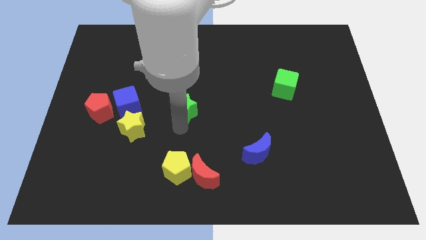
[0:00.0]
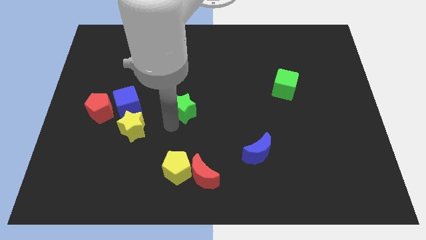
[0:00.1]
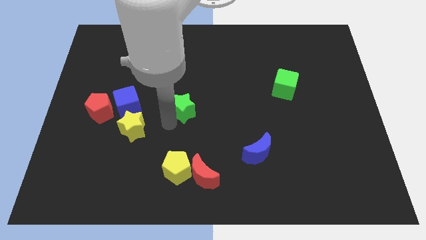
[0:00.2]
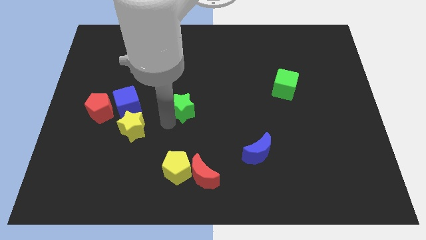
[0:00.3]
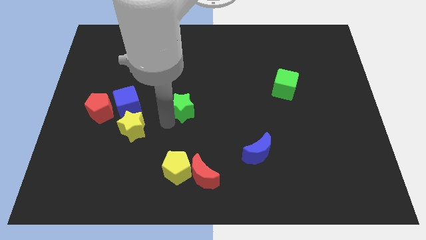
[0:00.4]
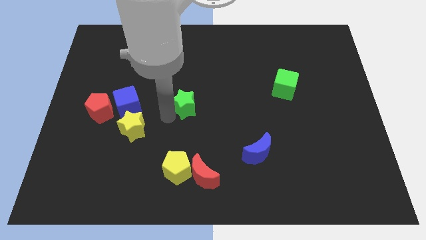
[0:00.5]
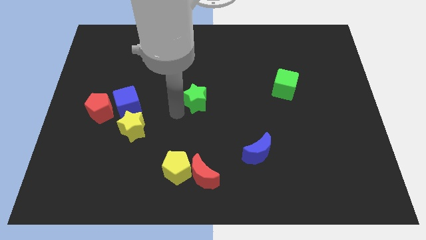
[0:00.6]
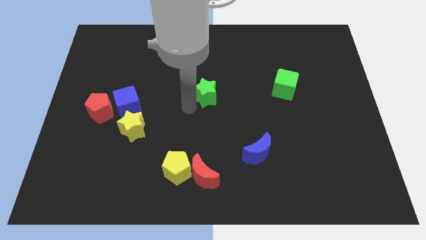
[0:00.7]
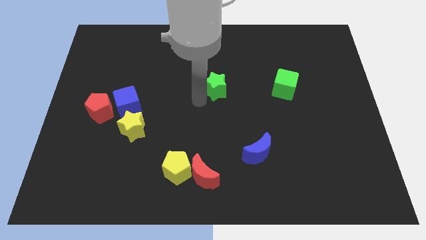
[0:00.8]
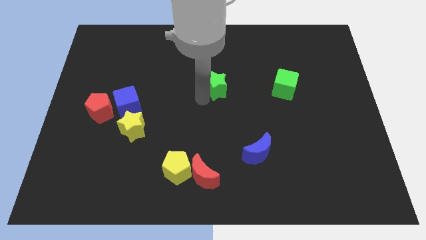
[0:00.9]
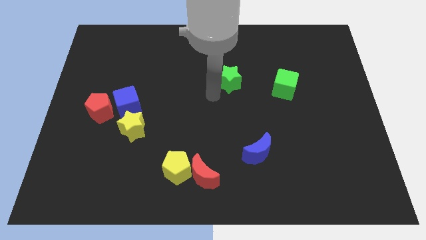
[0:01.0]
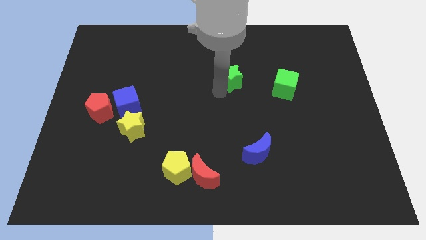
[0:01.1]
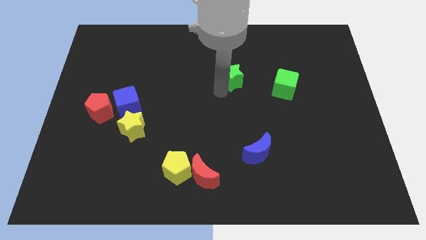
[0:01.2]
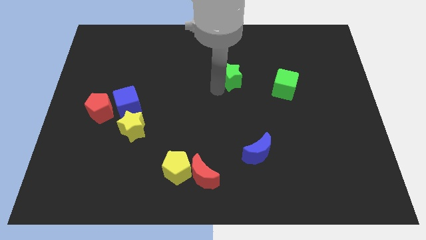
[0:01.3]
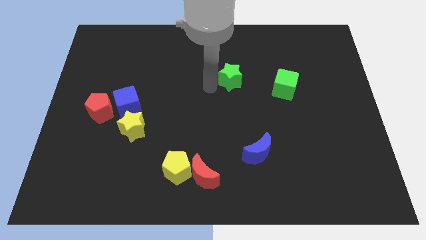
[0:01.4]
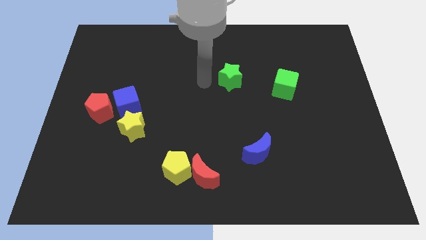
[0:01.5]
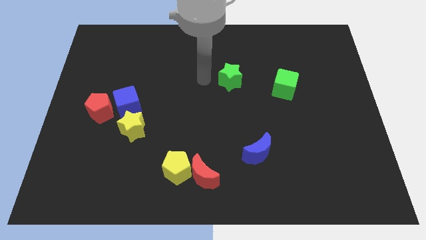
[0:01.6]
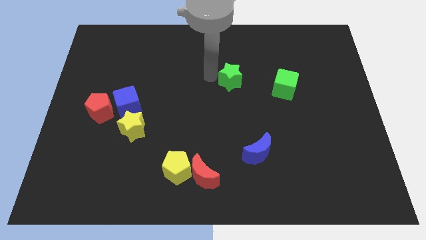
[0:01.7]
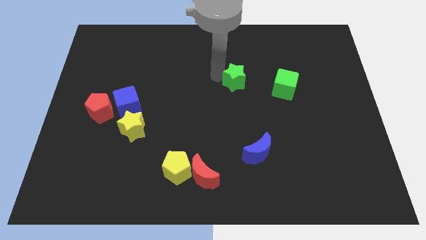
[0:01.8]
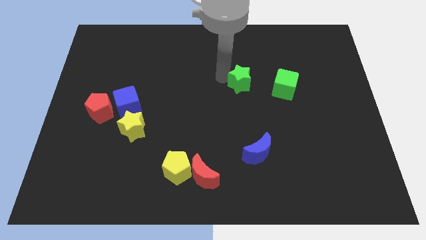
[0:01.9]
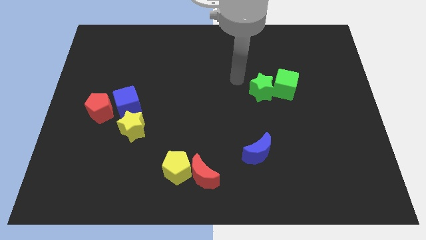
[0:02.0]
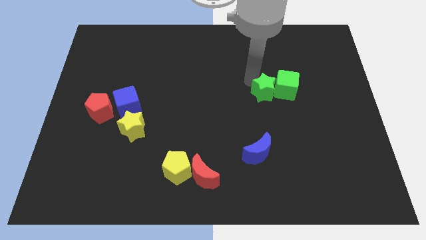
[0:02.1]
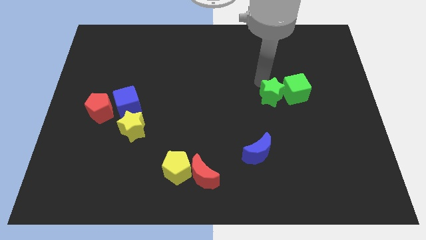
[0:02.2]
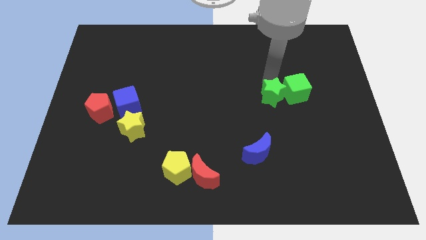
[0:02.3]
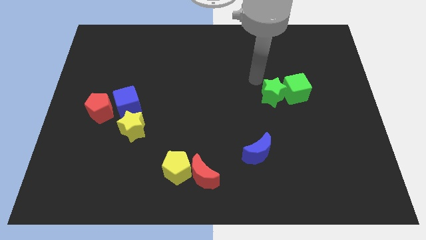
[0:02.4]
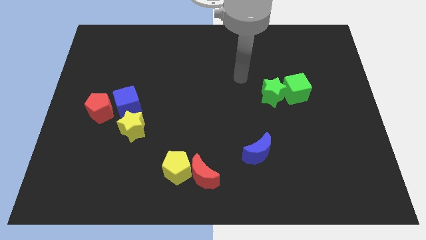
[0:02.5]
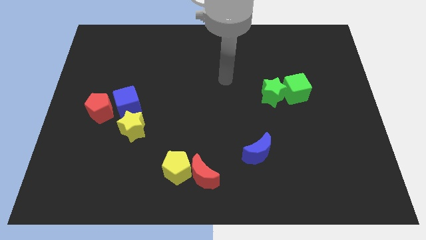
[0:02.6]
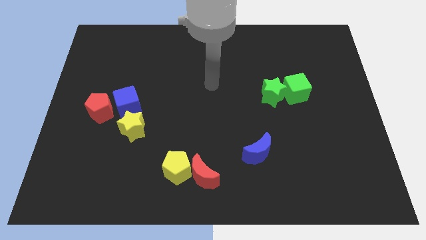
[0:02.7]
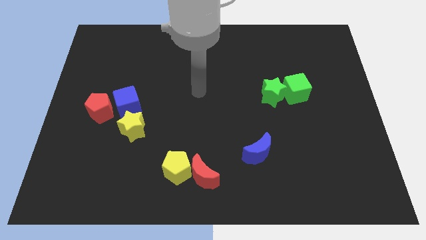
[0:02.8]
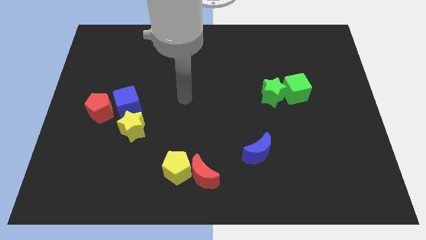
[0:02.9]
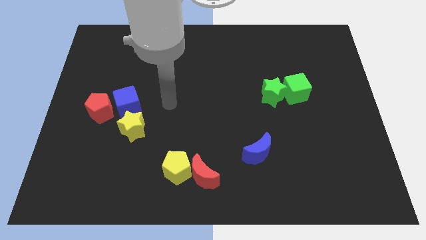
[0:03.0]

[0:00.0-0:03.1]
move the green star into the green cube

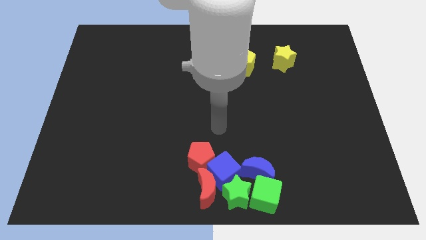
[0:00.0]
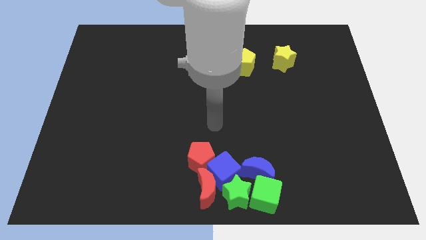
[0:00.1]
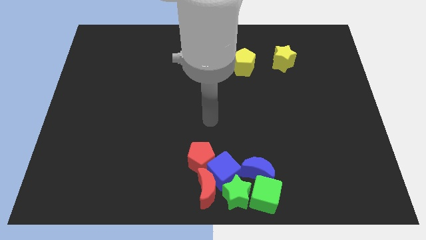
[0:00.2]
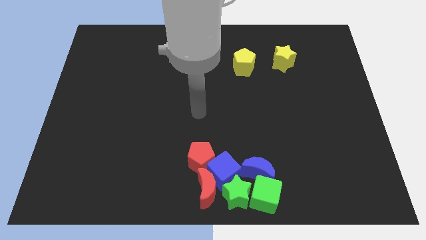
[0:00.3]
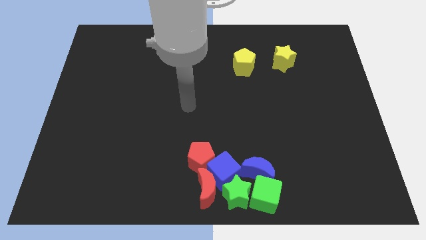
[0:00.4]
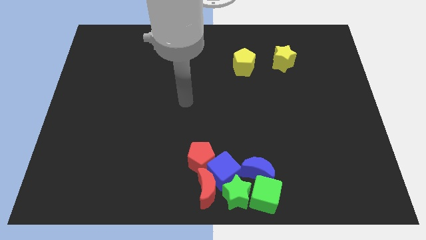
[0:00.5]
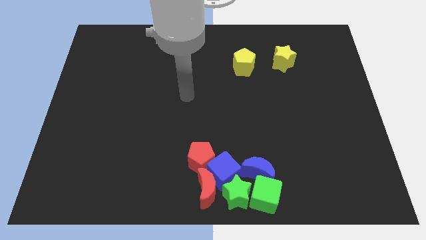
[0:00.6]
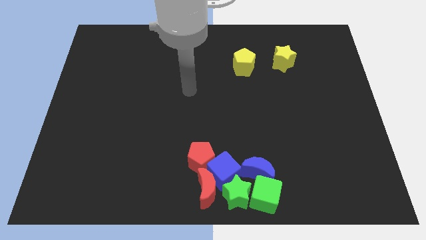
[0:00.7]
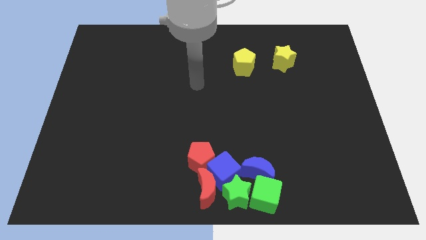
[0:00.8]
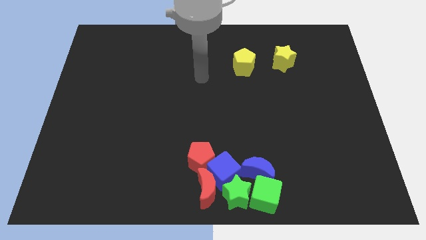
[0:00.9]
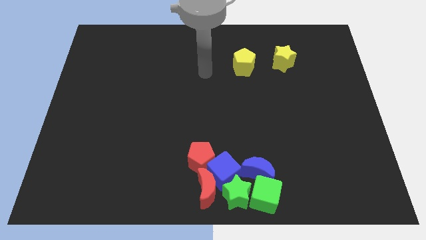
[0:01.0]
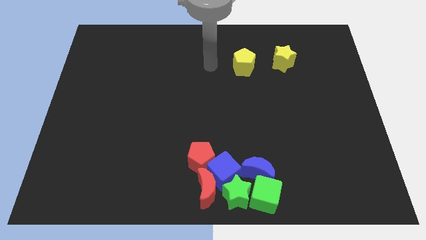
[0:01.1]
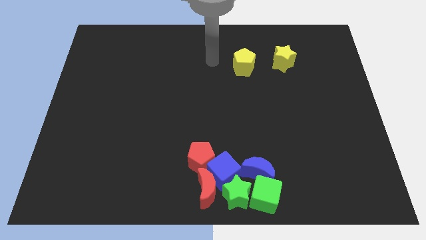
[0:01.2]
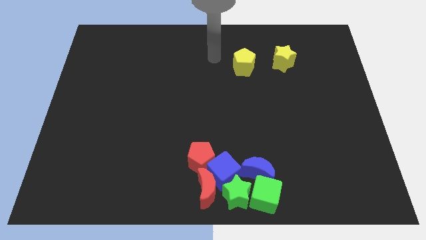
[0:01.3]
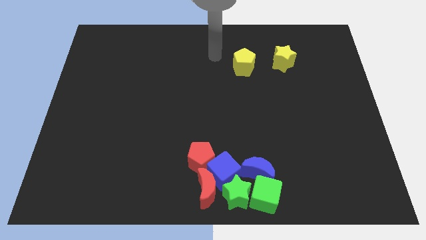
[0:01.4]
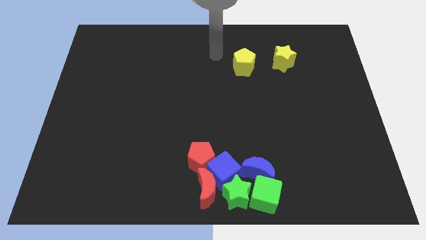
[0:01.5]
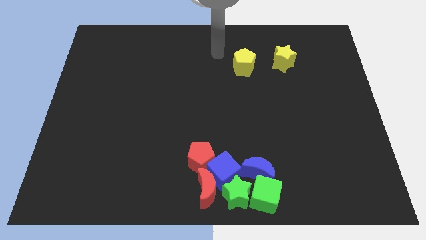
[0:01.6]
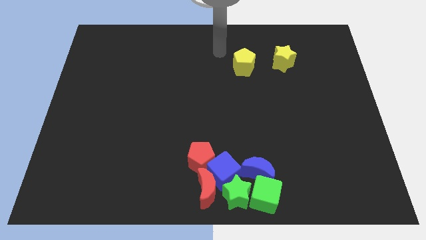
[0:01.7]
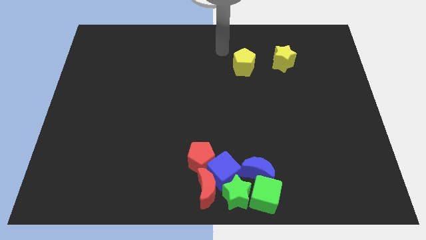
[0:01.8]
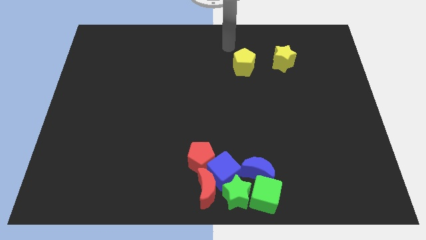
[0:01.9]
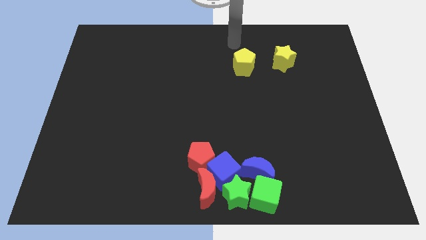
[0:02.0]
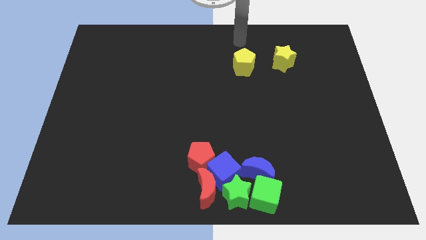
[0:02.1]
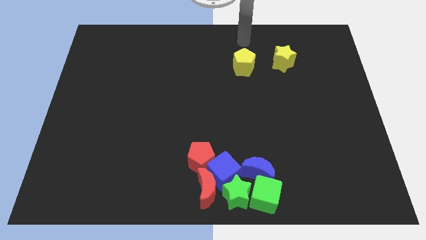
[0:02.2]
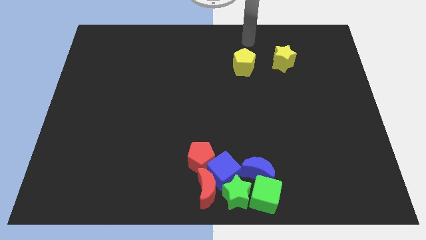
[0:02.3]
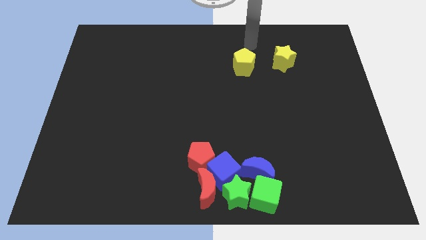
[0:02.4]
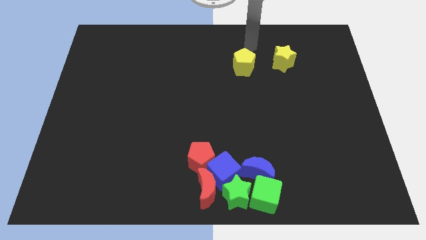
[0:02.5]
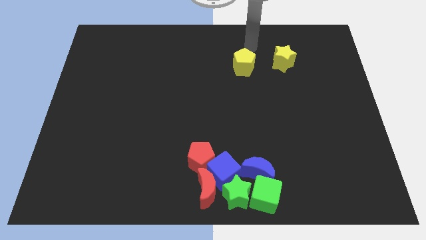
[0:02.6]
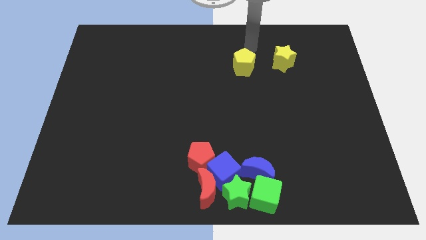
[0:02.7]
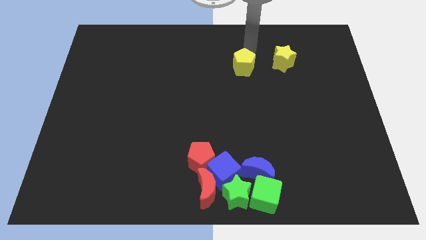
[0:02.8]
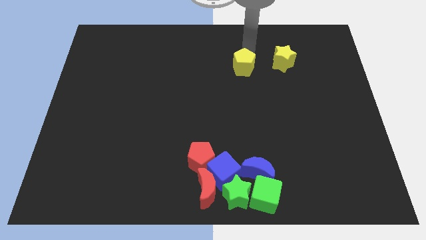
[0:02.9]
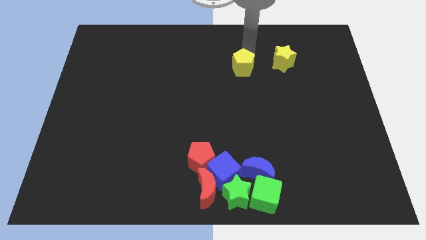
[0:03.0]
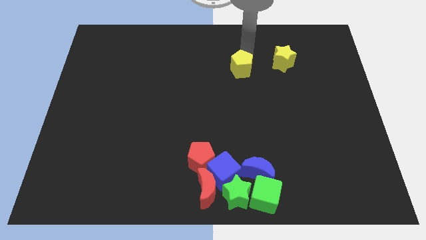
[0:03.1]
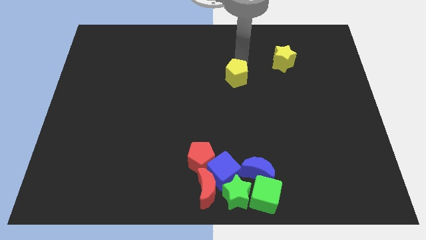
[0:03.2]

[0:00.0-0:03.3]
move your arm near yellow pentagon

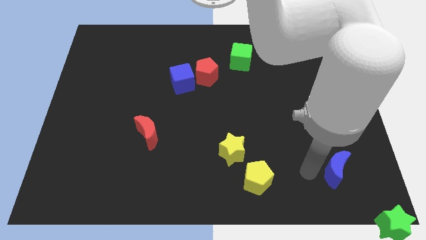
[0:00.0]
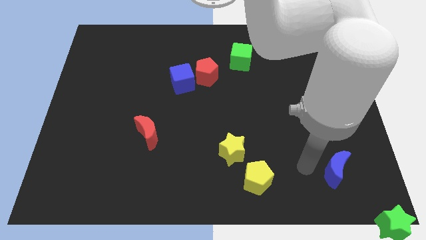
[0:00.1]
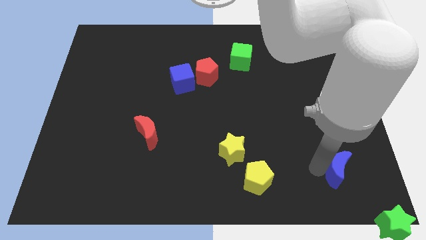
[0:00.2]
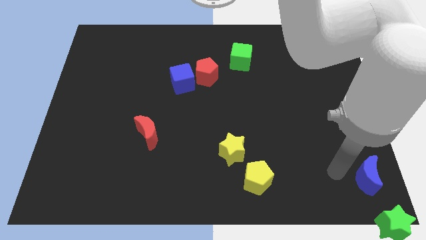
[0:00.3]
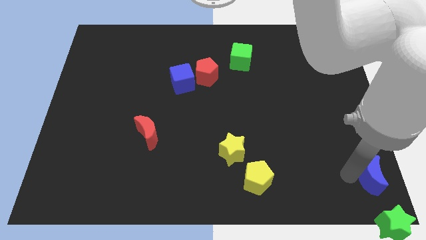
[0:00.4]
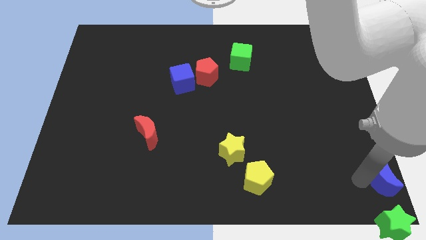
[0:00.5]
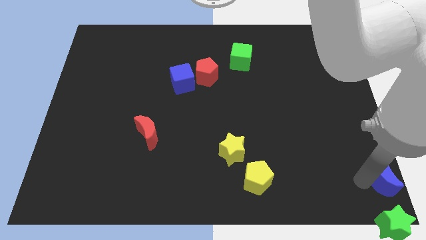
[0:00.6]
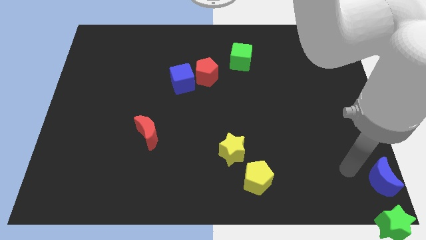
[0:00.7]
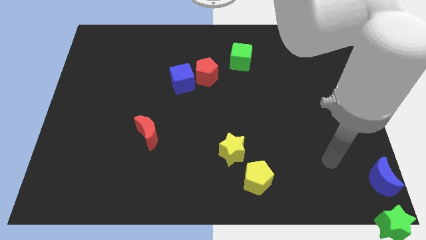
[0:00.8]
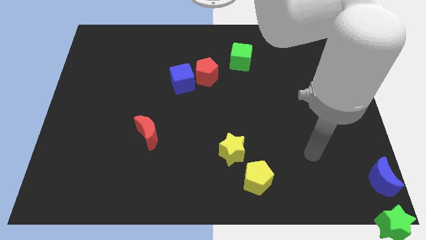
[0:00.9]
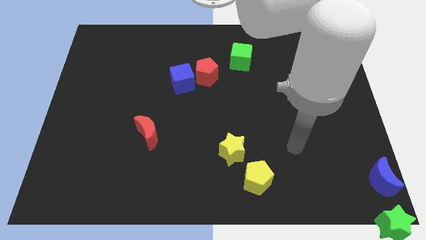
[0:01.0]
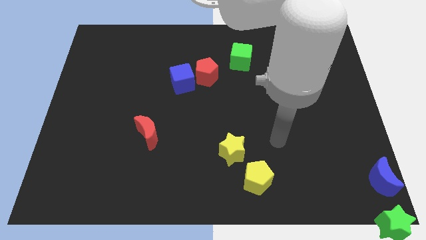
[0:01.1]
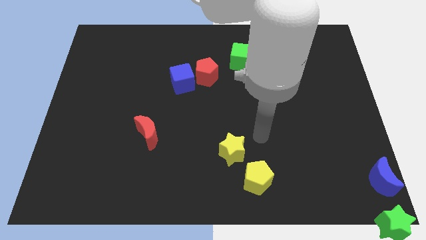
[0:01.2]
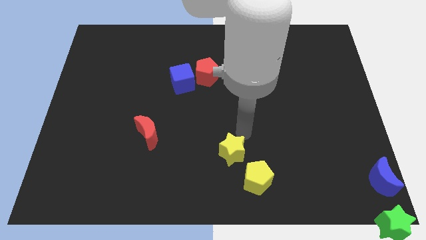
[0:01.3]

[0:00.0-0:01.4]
place the blue moon vertically above the green star

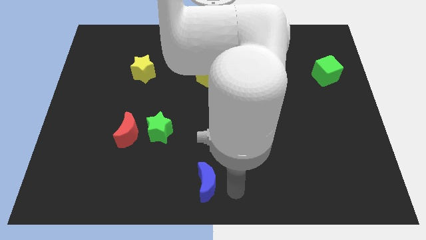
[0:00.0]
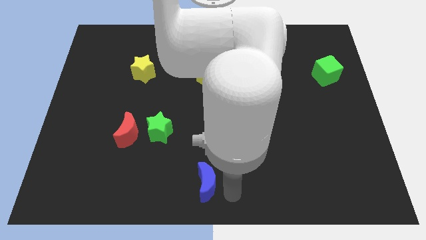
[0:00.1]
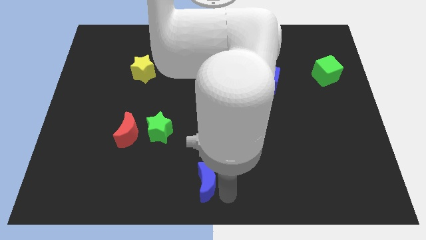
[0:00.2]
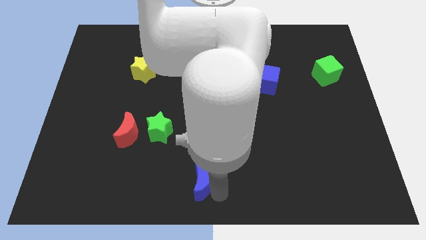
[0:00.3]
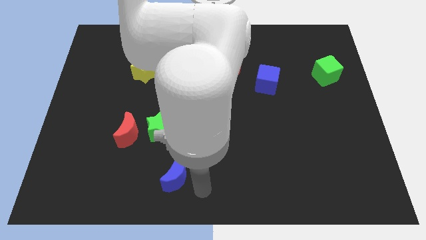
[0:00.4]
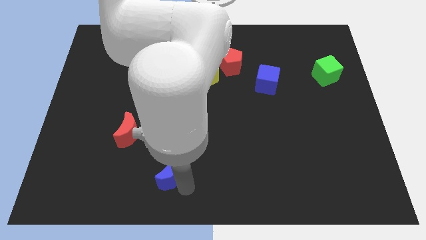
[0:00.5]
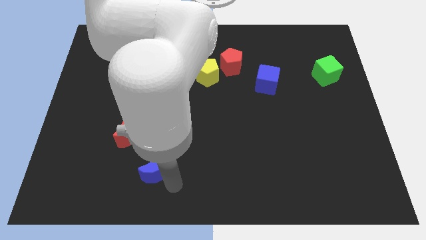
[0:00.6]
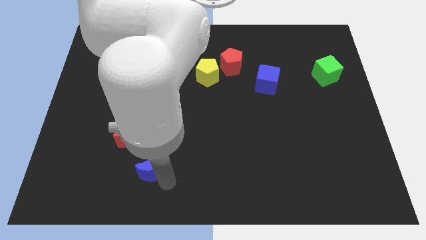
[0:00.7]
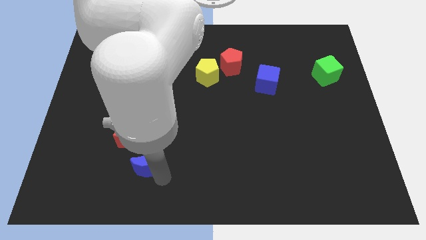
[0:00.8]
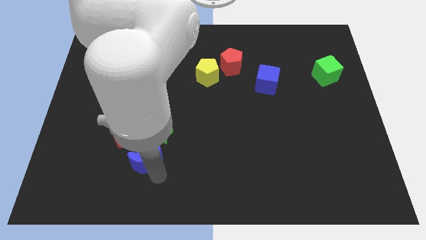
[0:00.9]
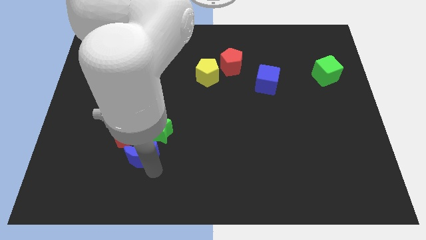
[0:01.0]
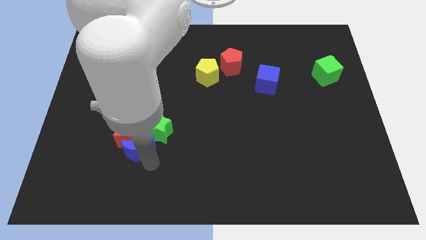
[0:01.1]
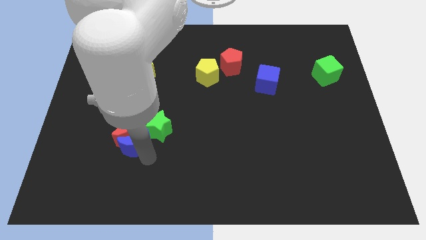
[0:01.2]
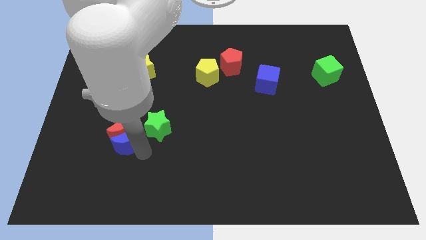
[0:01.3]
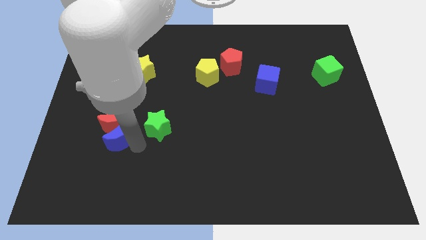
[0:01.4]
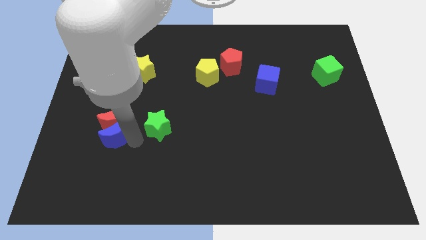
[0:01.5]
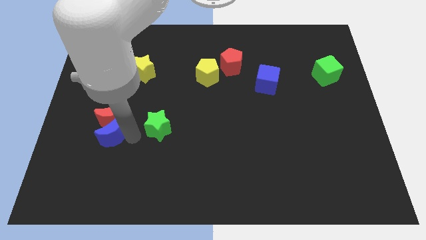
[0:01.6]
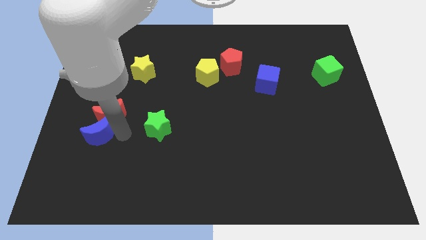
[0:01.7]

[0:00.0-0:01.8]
push the blue moon into the red moon
